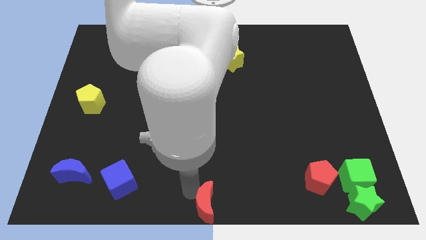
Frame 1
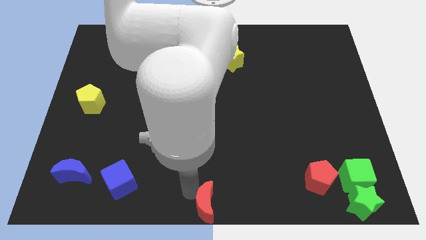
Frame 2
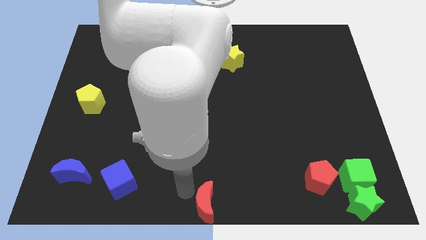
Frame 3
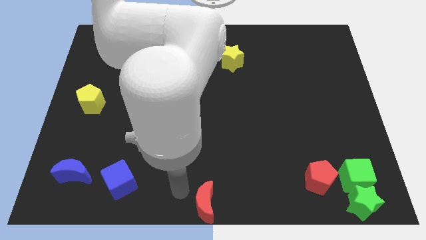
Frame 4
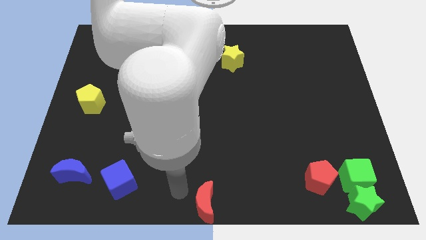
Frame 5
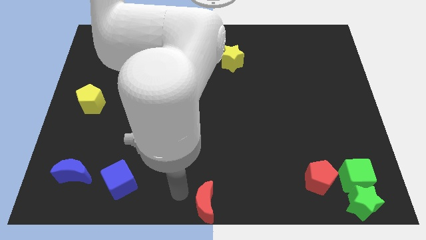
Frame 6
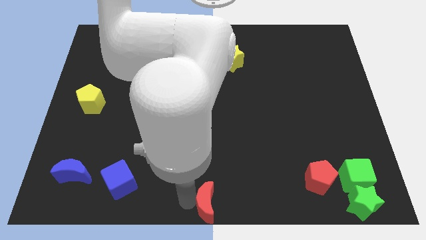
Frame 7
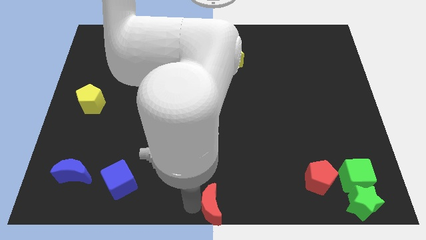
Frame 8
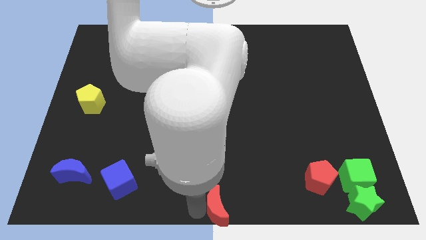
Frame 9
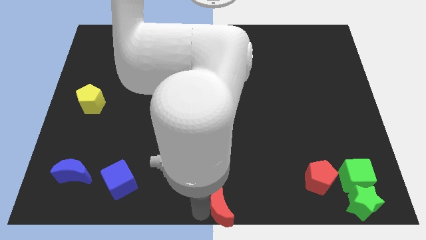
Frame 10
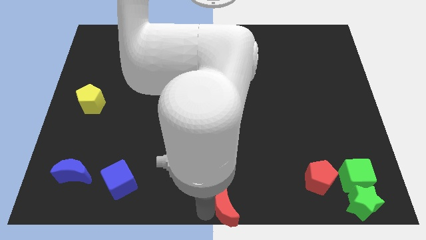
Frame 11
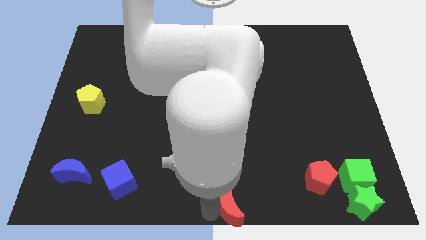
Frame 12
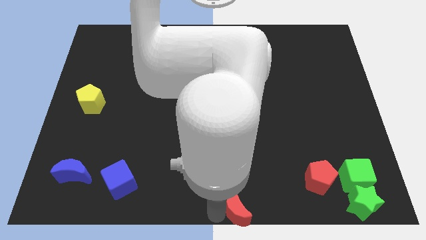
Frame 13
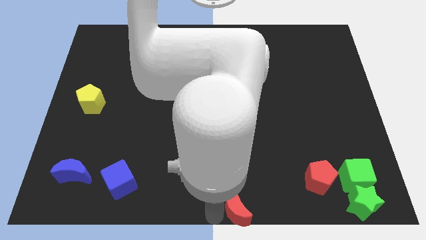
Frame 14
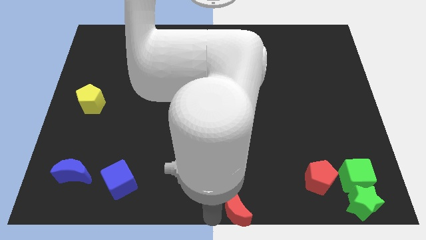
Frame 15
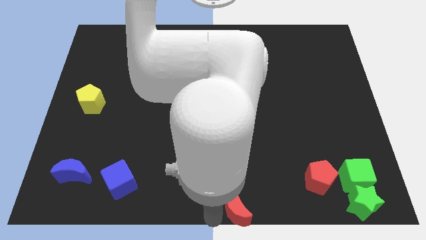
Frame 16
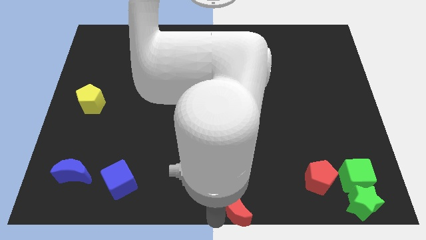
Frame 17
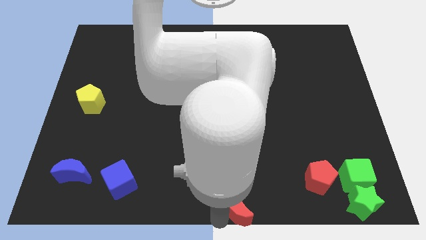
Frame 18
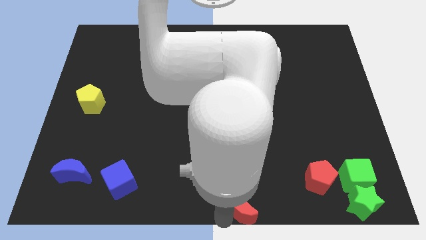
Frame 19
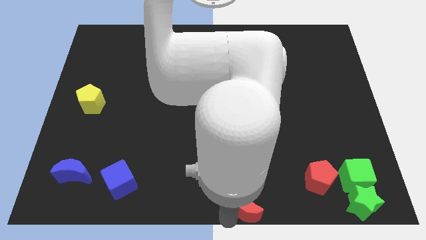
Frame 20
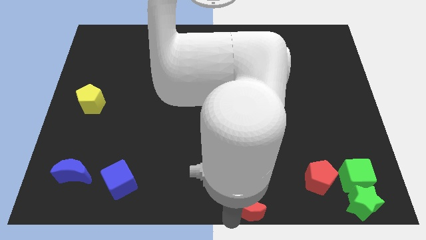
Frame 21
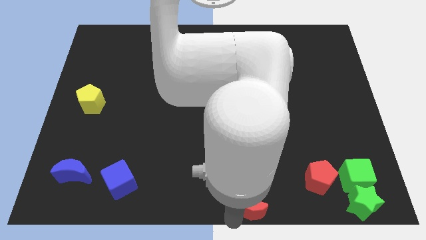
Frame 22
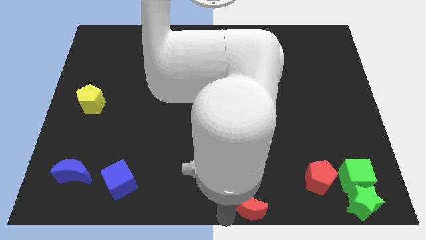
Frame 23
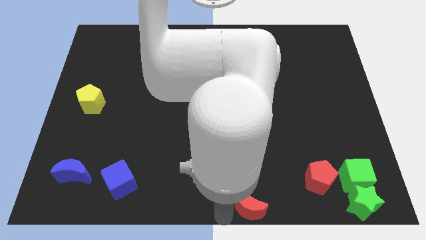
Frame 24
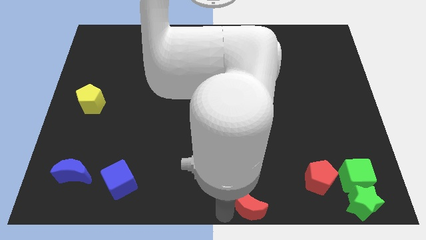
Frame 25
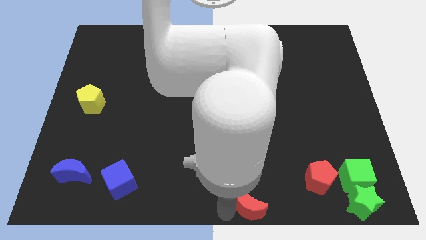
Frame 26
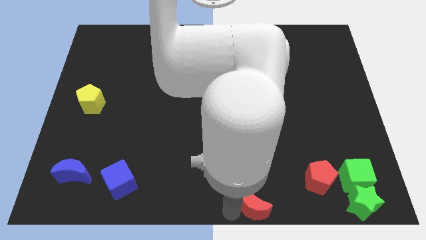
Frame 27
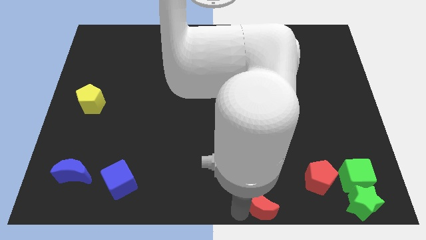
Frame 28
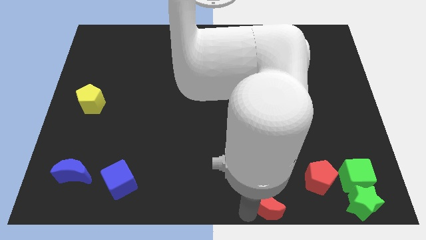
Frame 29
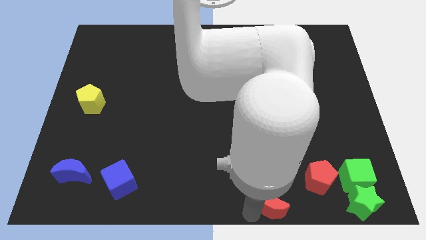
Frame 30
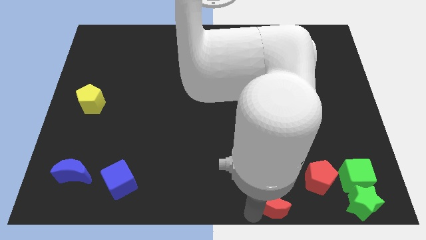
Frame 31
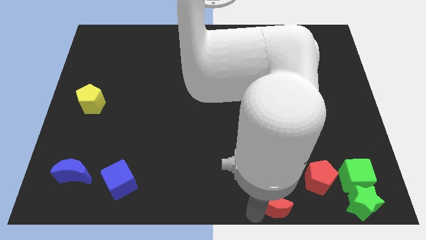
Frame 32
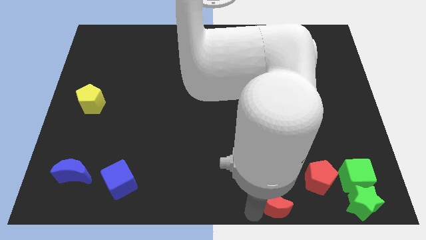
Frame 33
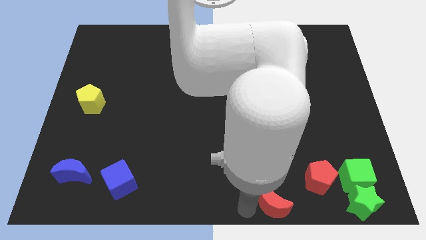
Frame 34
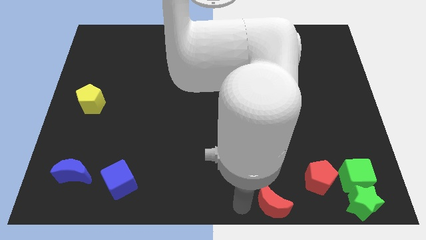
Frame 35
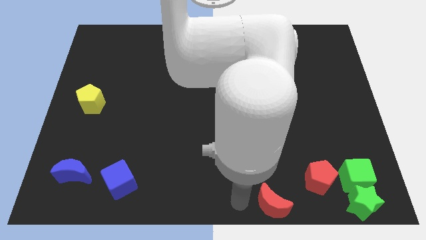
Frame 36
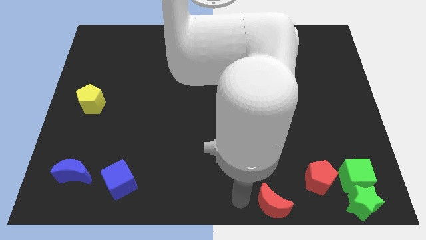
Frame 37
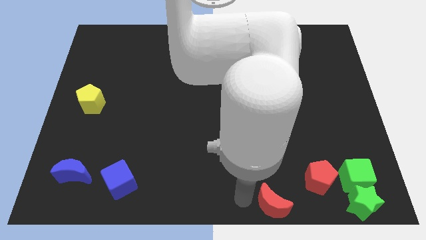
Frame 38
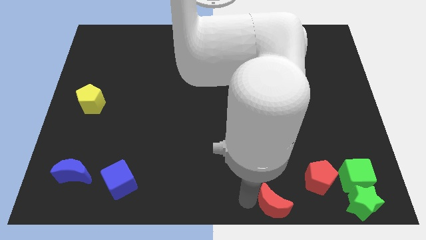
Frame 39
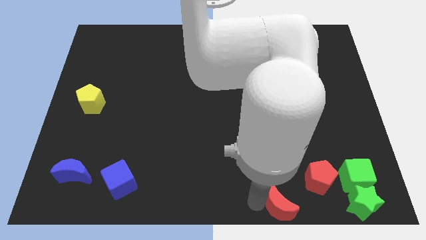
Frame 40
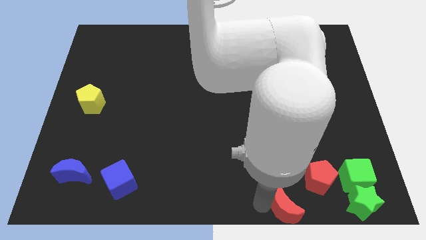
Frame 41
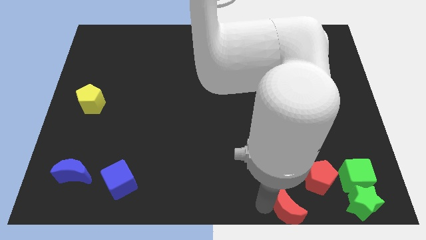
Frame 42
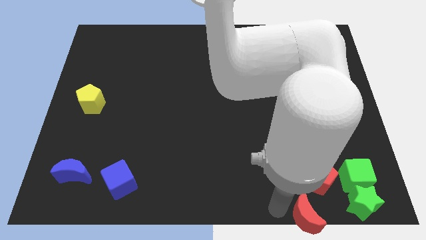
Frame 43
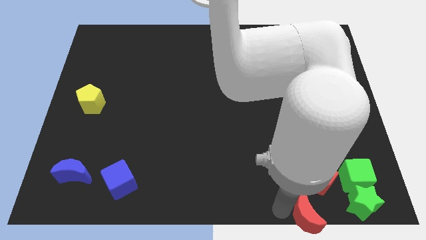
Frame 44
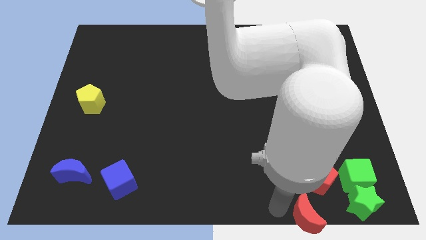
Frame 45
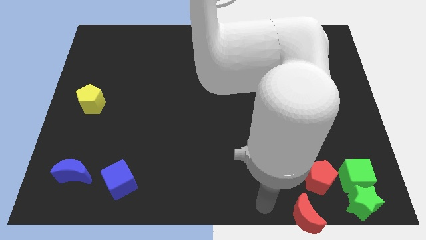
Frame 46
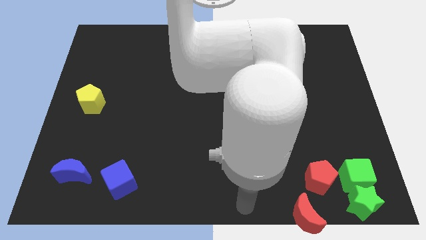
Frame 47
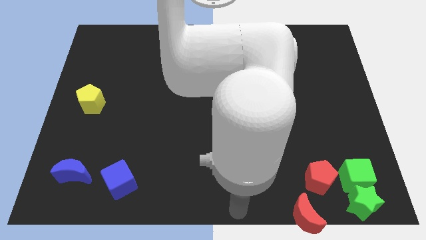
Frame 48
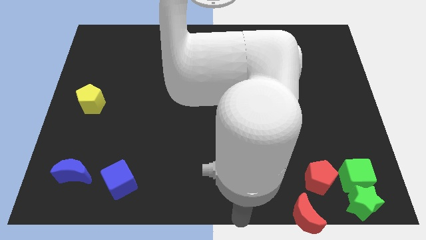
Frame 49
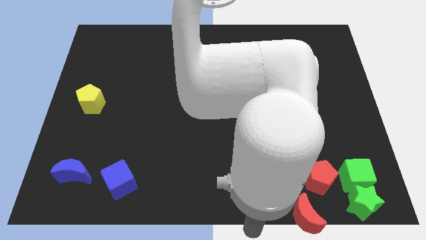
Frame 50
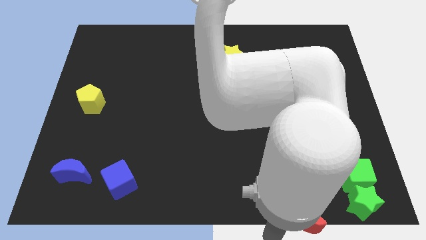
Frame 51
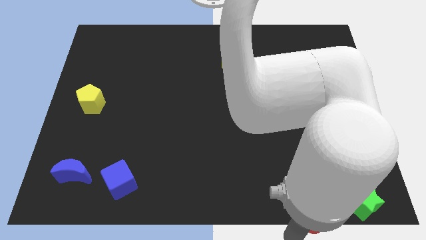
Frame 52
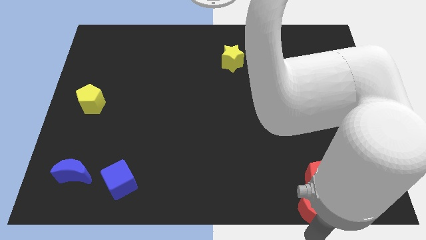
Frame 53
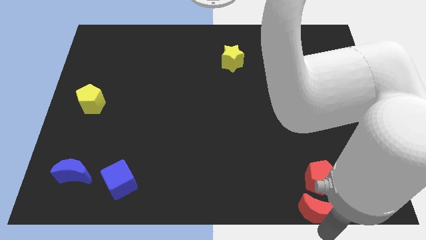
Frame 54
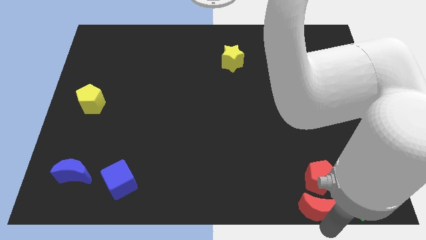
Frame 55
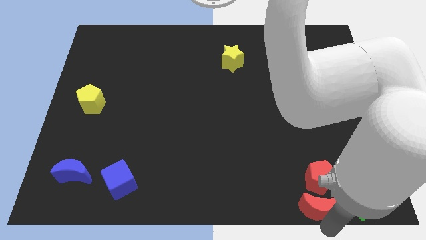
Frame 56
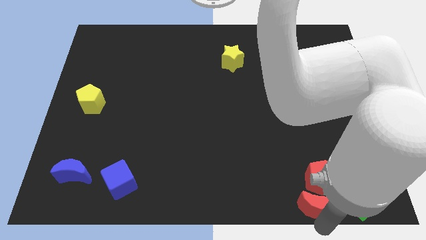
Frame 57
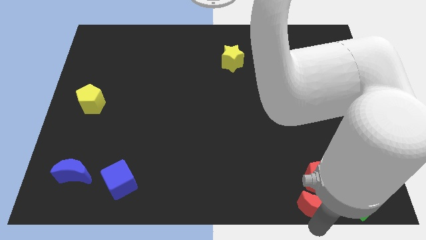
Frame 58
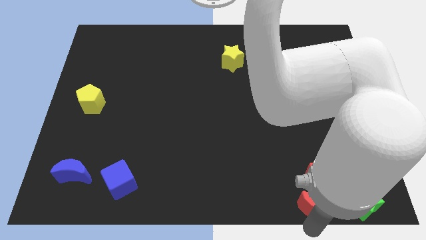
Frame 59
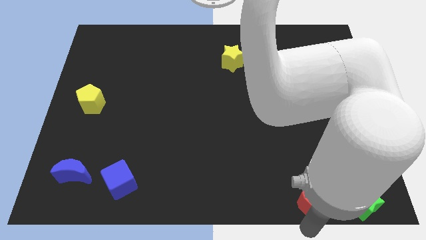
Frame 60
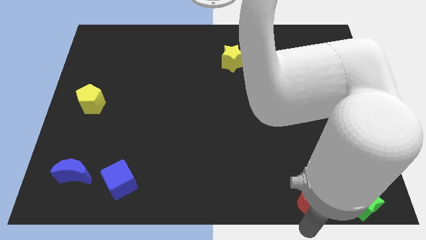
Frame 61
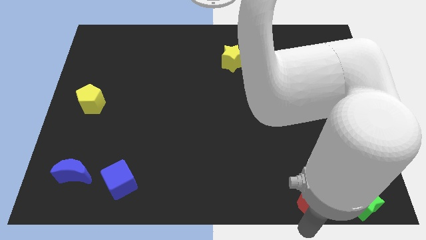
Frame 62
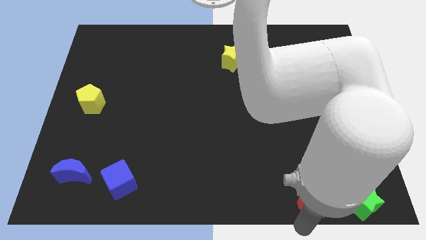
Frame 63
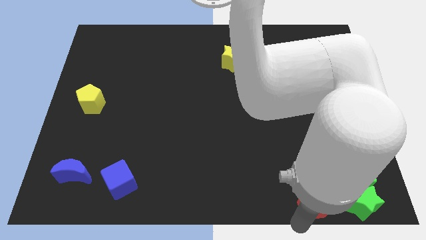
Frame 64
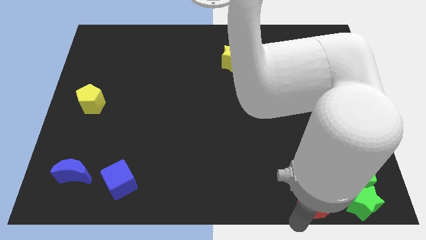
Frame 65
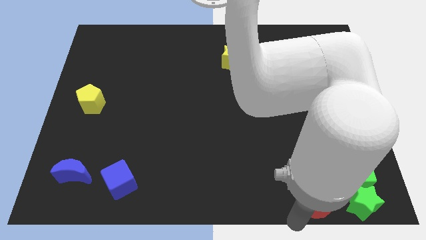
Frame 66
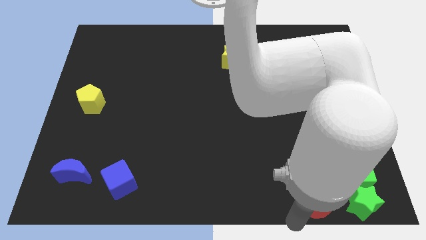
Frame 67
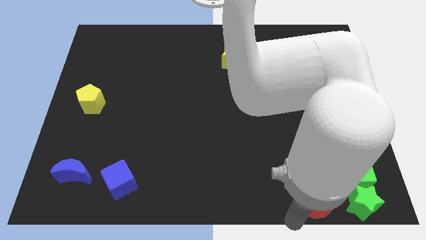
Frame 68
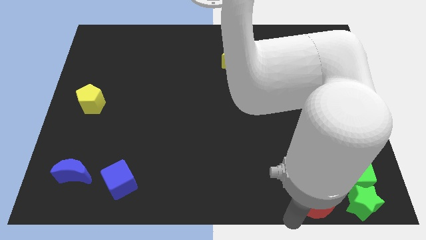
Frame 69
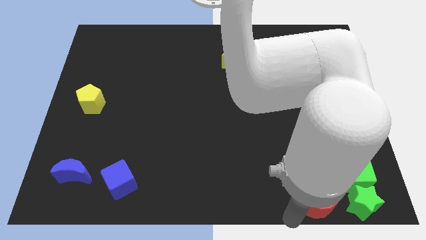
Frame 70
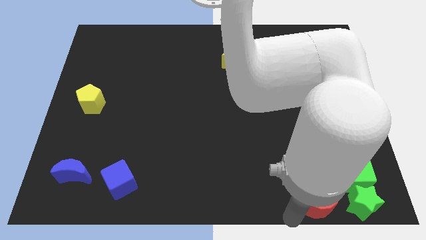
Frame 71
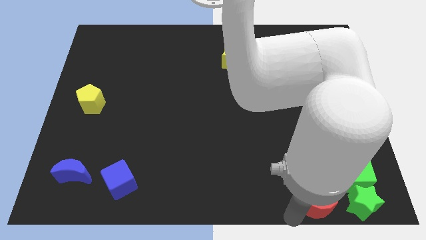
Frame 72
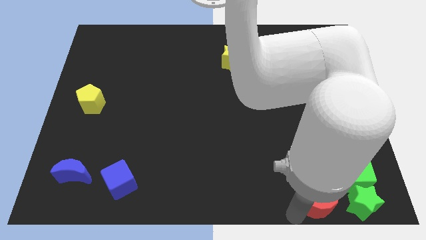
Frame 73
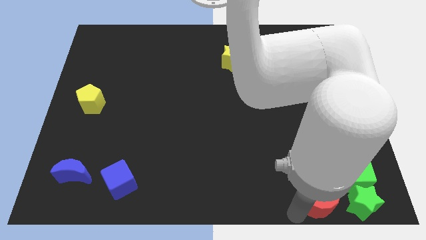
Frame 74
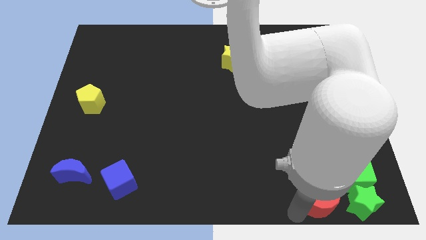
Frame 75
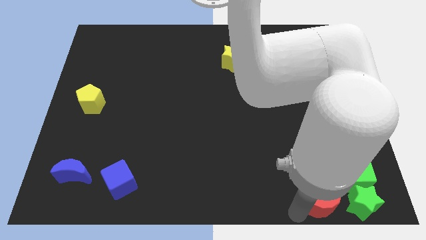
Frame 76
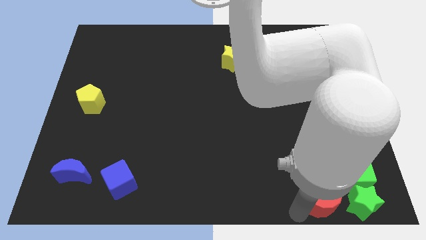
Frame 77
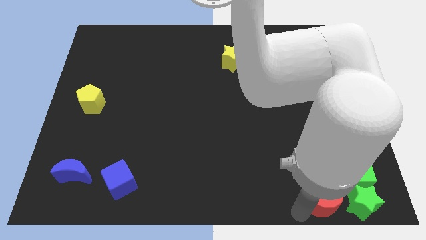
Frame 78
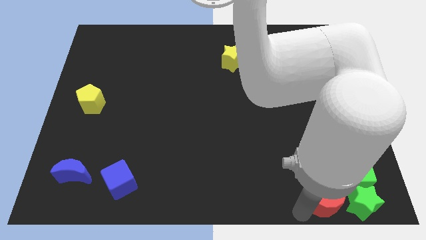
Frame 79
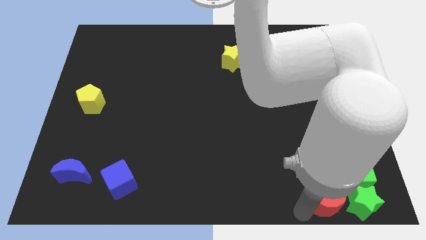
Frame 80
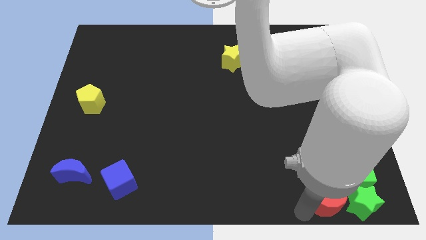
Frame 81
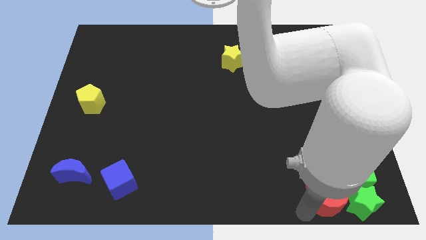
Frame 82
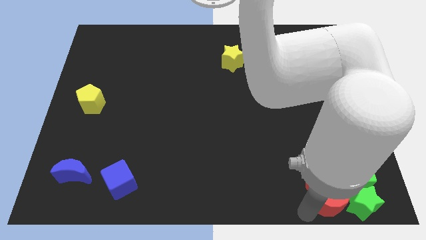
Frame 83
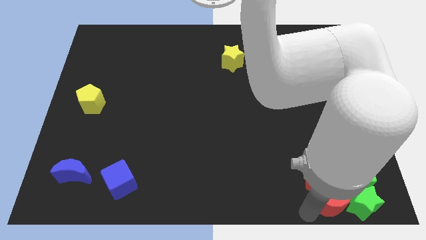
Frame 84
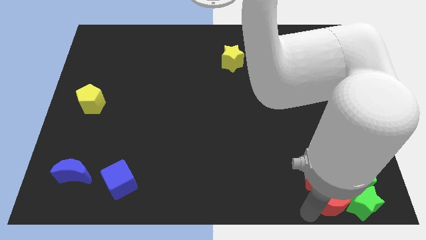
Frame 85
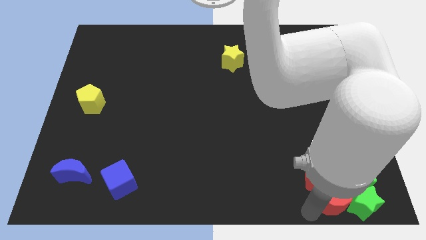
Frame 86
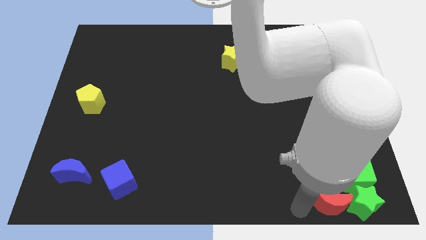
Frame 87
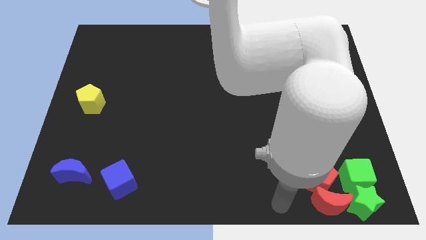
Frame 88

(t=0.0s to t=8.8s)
push the red moon to the left side of green star

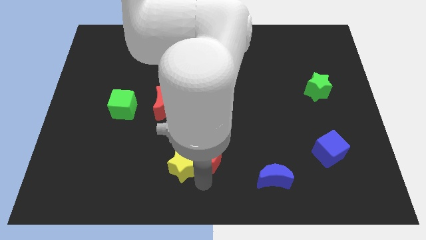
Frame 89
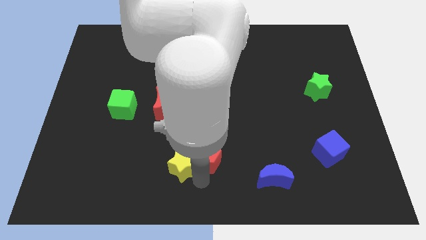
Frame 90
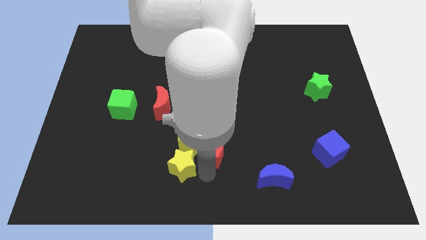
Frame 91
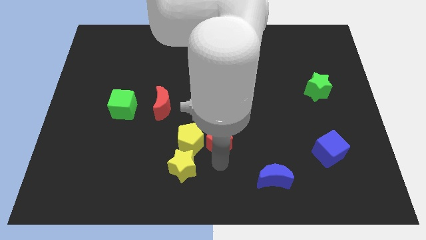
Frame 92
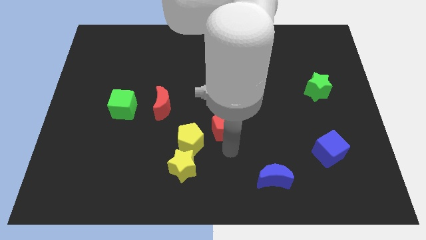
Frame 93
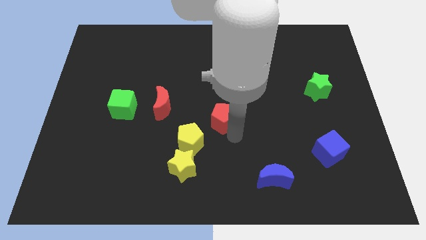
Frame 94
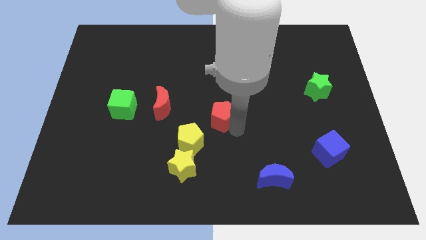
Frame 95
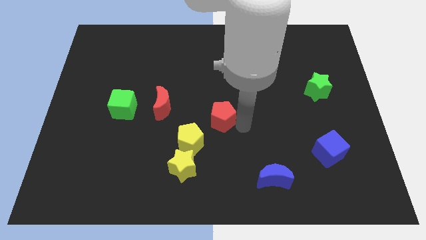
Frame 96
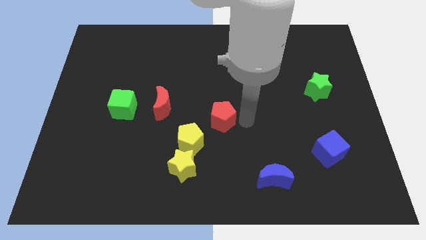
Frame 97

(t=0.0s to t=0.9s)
push the red pentagon away from the yellow star
